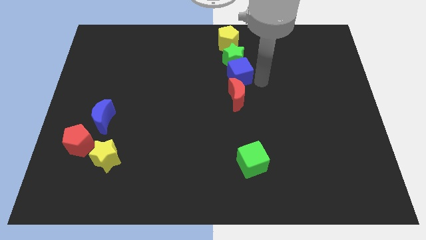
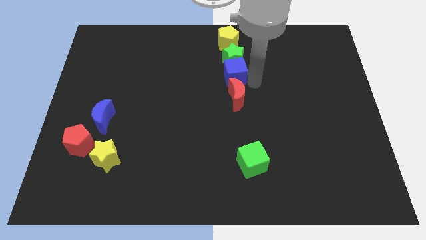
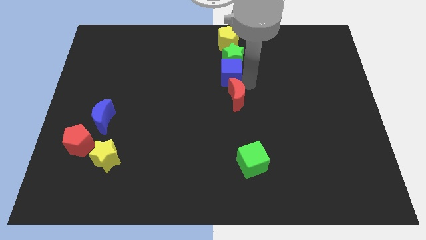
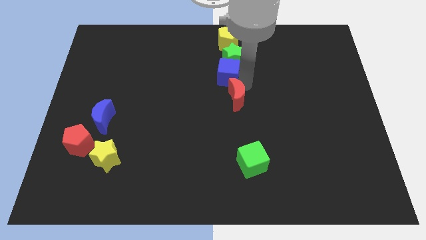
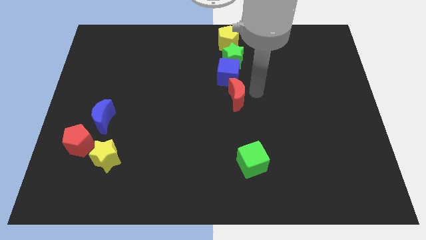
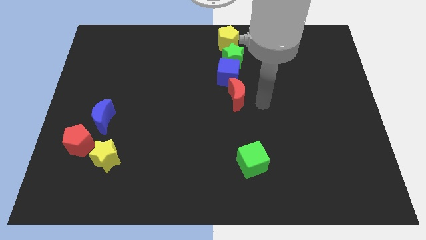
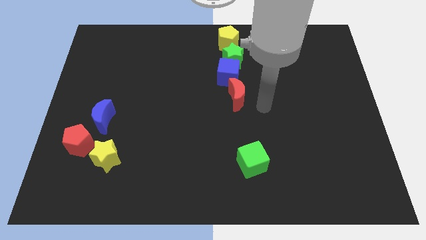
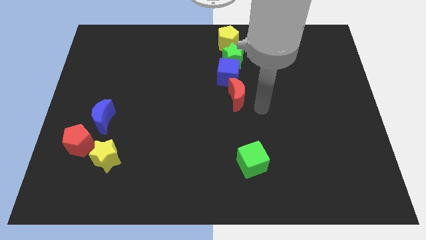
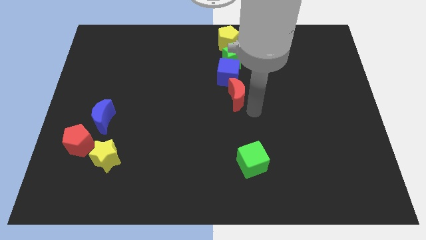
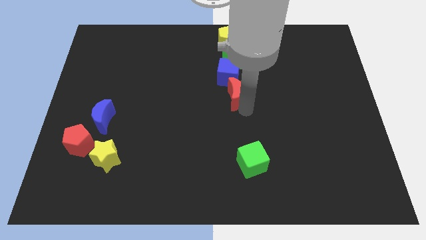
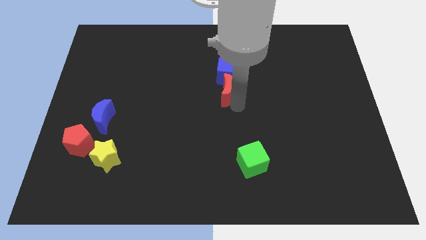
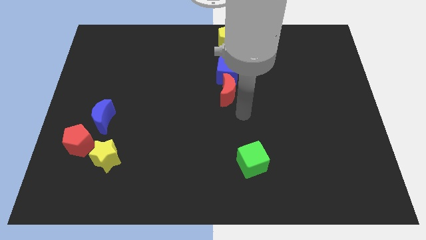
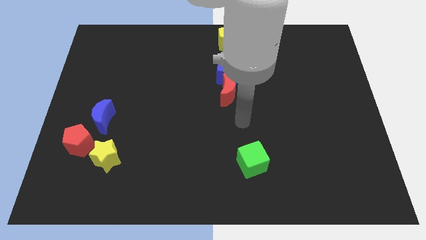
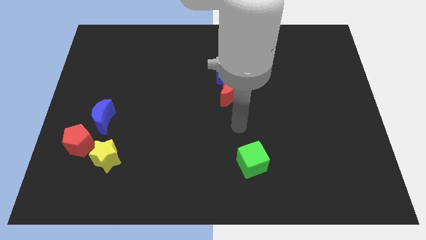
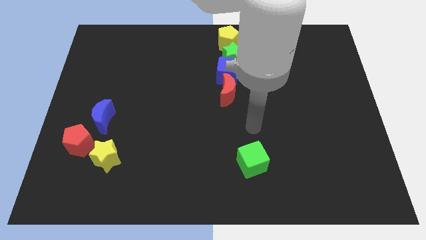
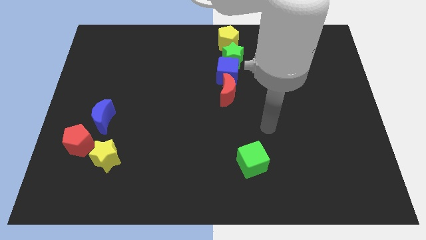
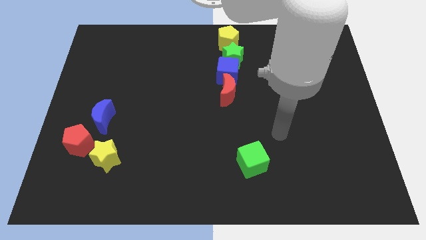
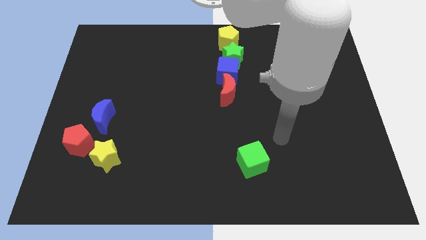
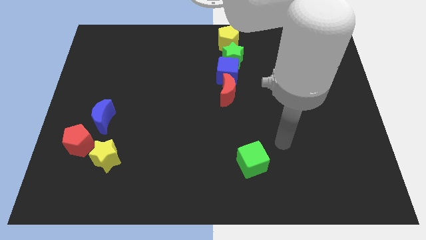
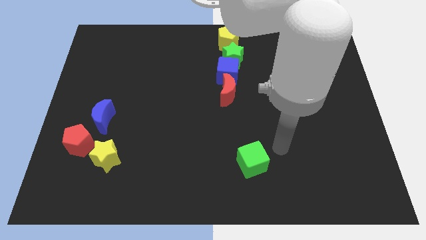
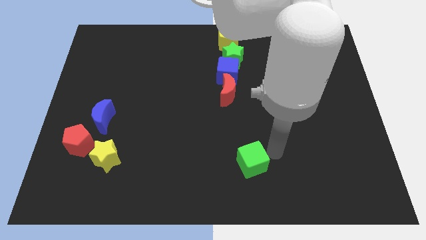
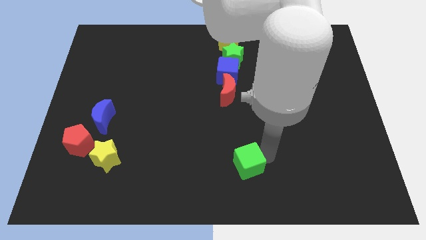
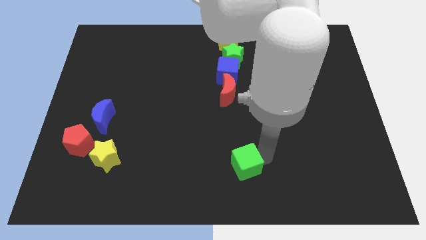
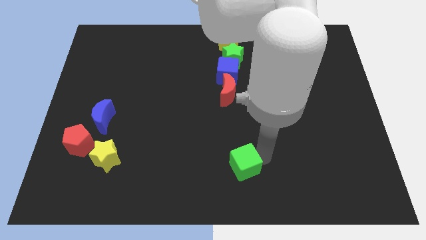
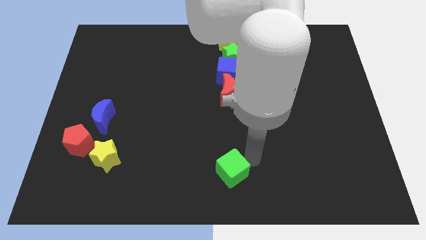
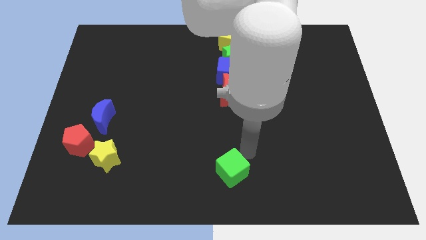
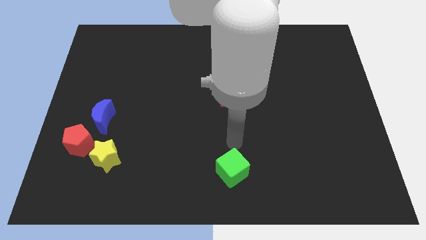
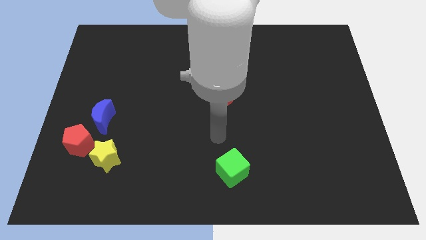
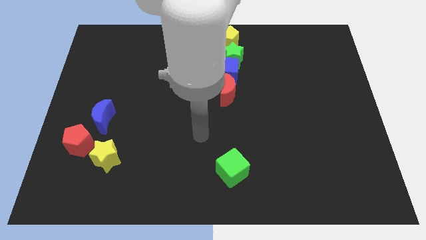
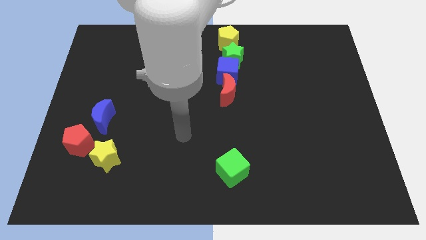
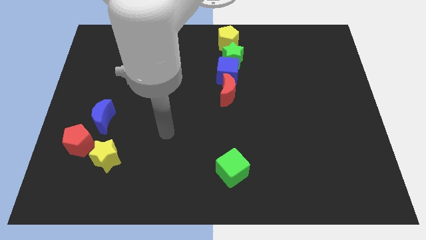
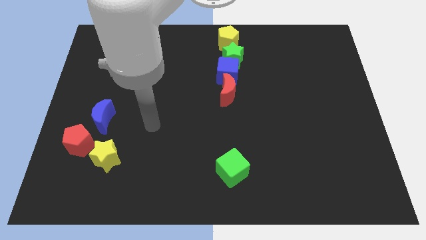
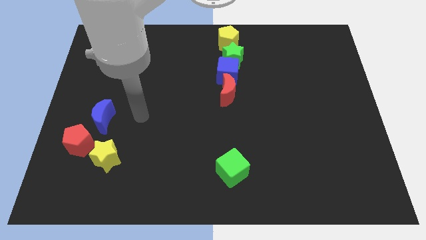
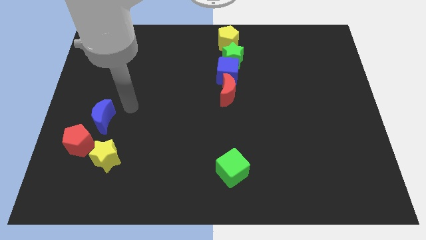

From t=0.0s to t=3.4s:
adjust the cubes and the red crescent to form a vertical line

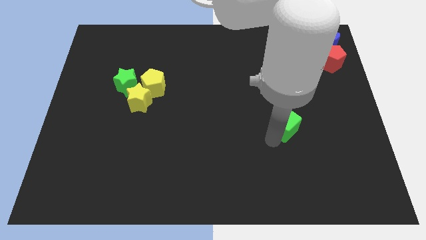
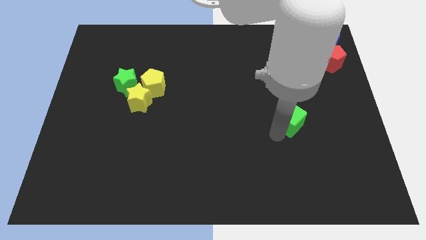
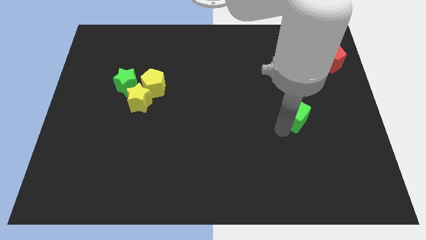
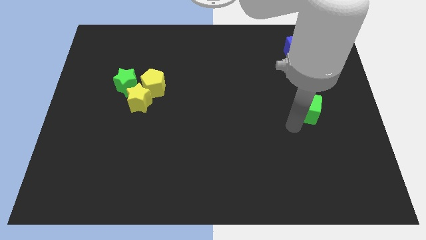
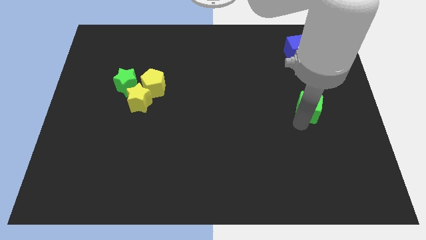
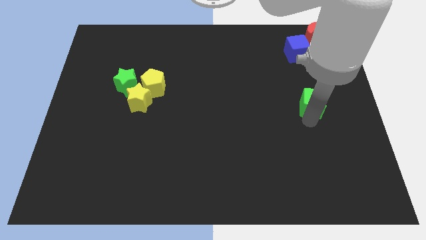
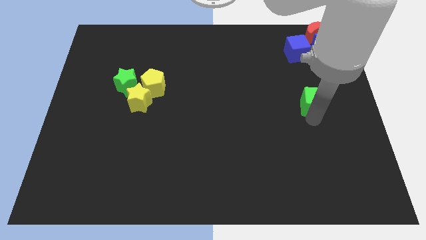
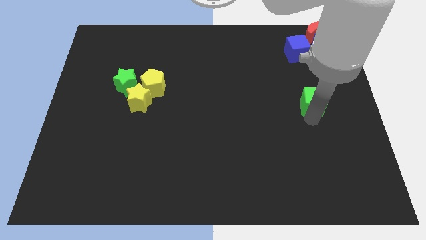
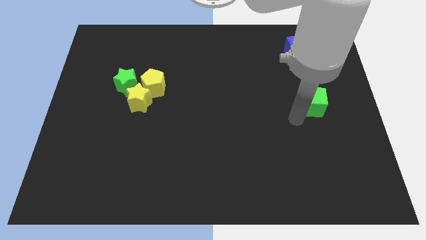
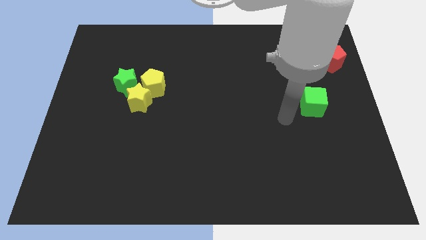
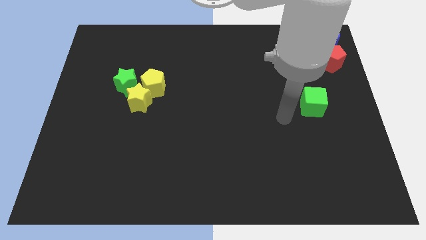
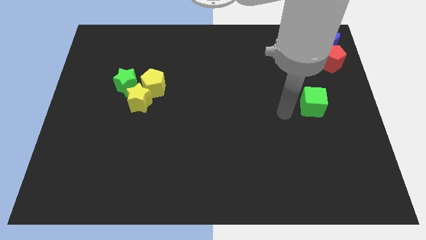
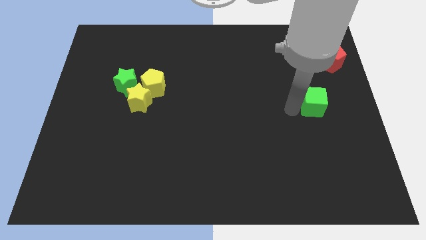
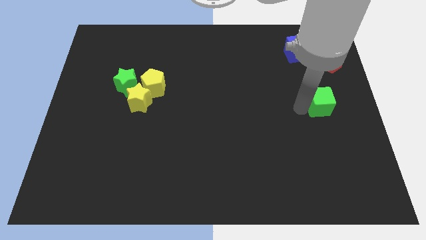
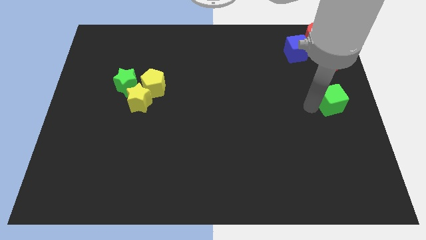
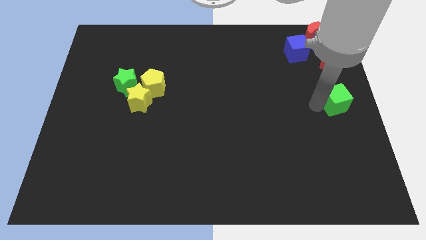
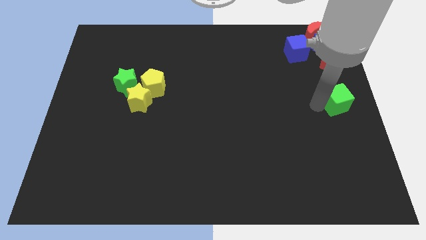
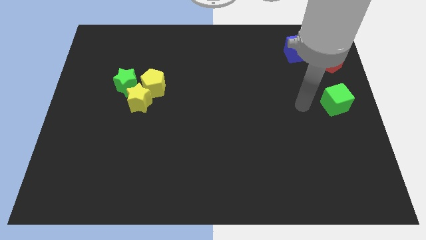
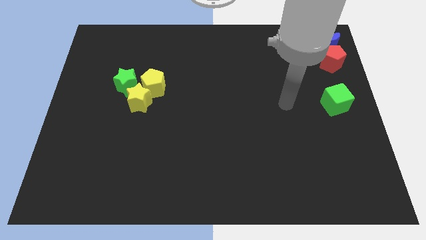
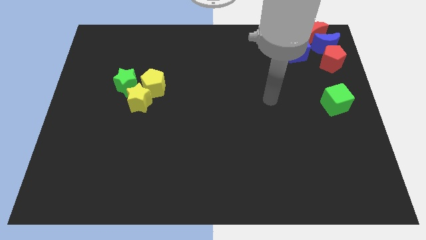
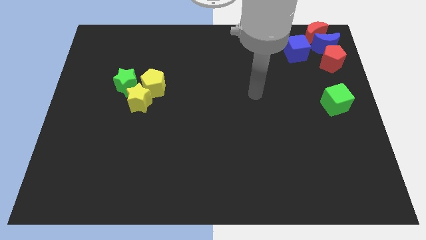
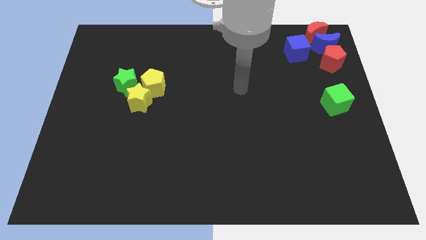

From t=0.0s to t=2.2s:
slide the green cube to the right side center of the board

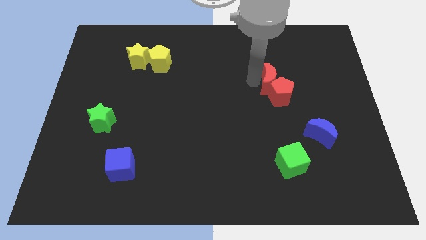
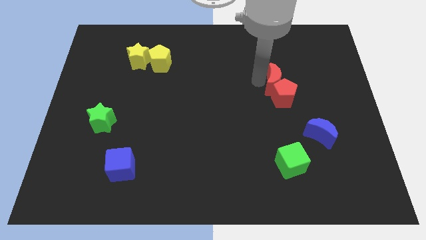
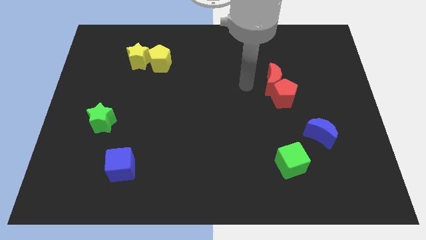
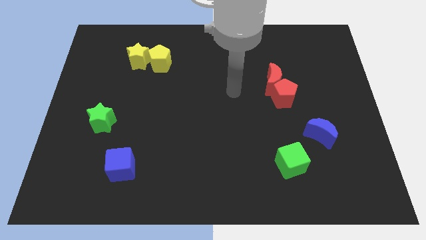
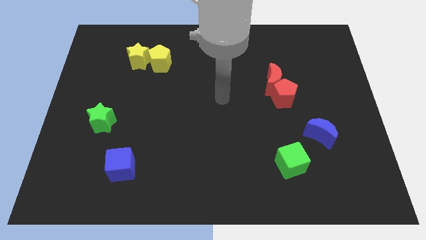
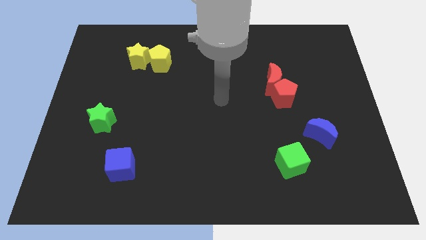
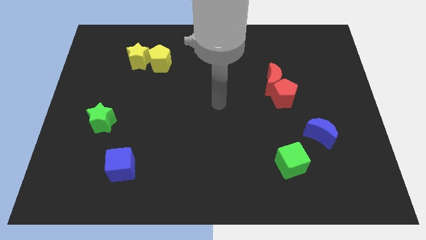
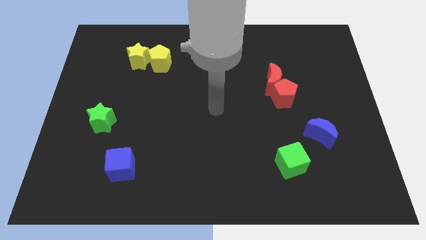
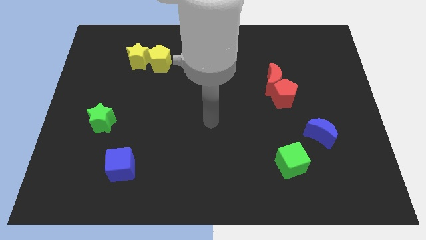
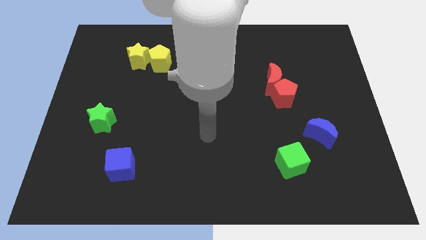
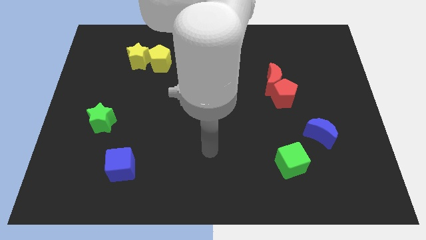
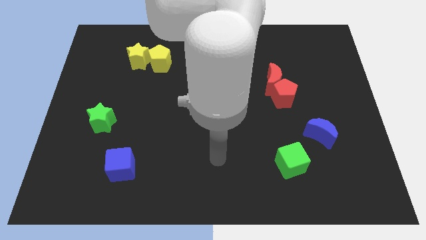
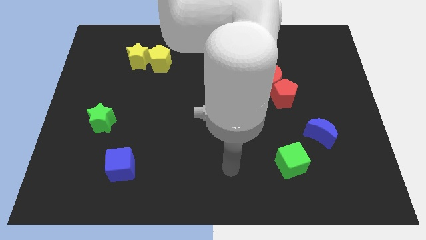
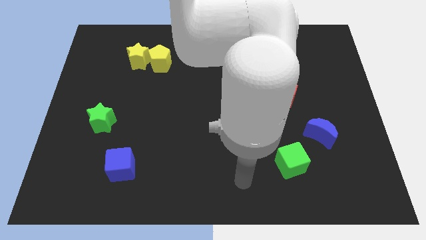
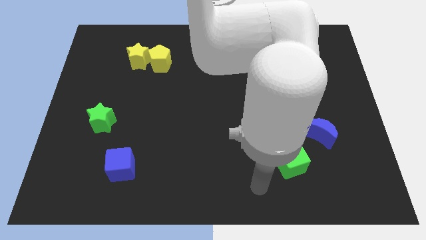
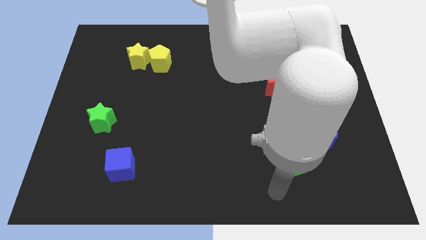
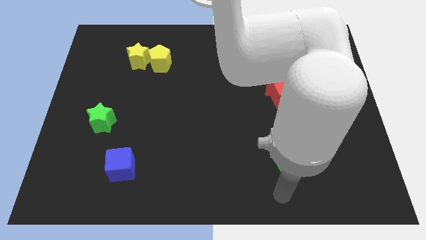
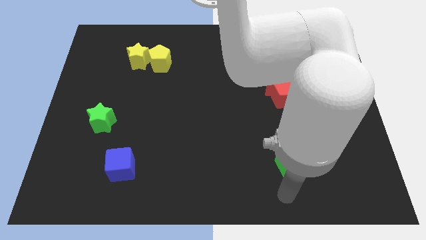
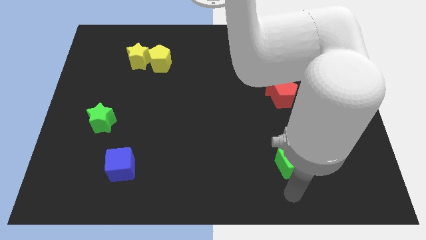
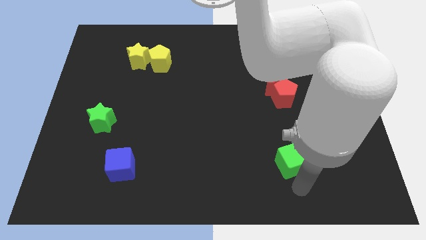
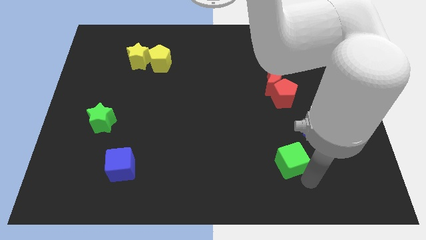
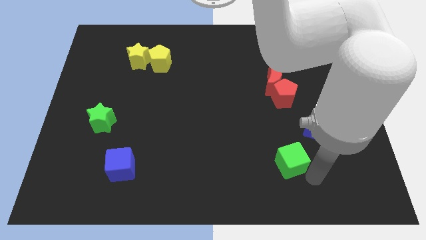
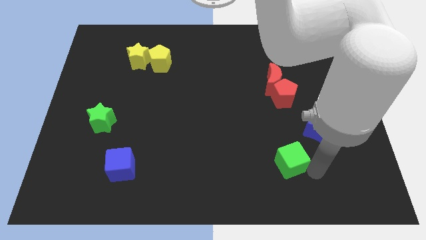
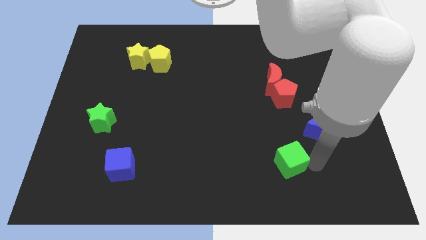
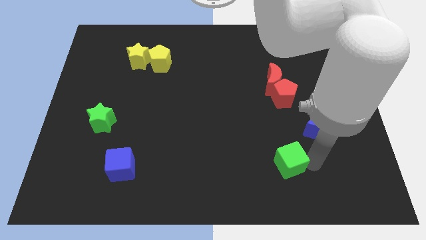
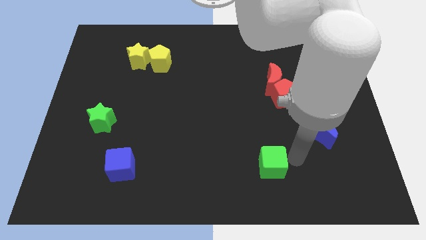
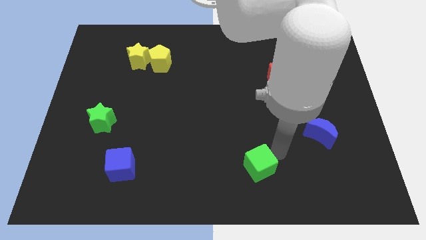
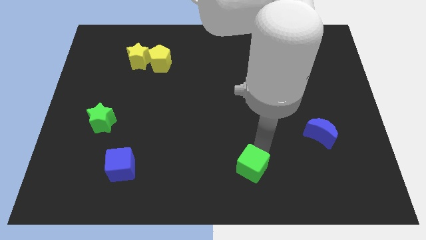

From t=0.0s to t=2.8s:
slightly move the green cube towards the left

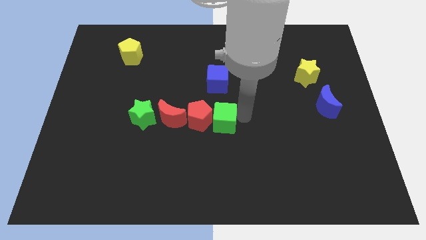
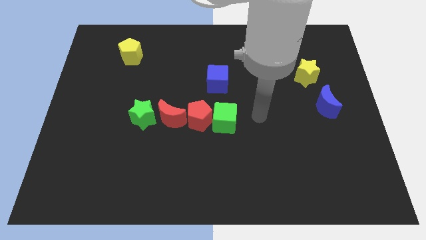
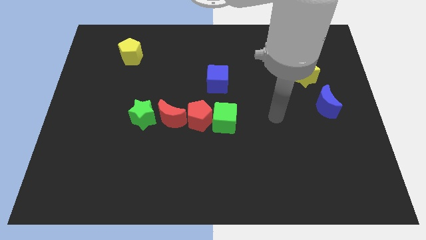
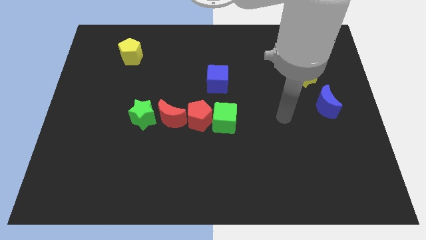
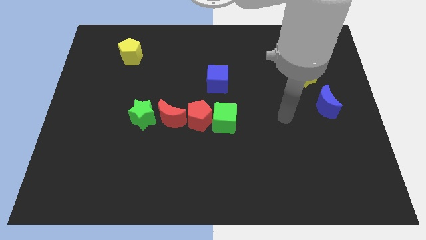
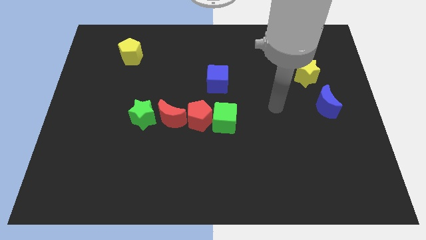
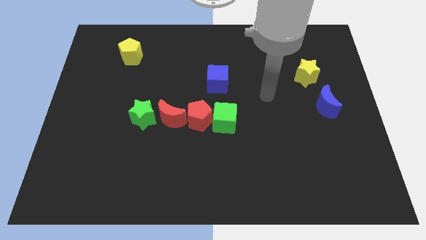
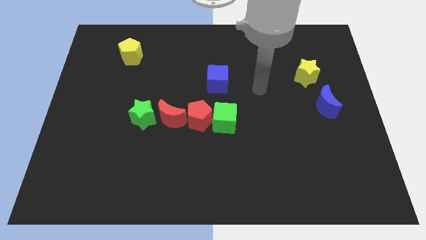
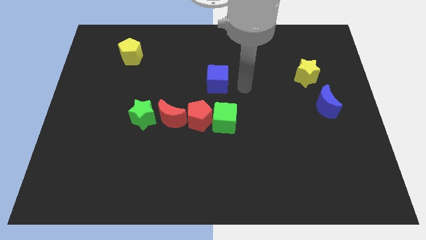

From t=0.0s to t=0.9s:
go away from the green cube
